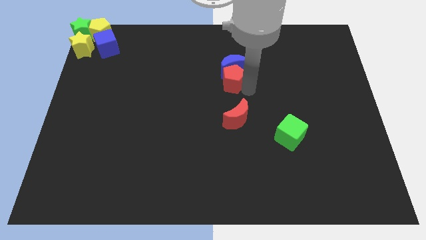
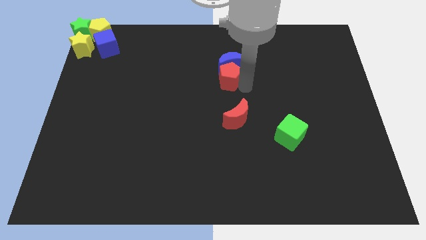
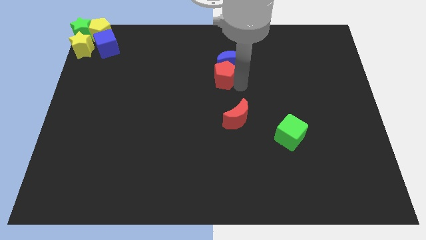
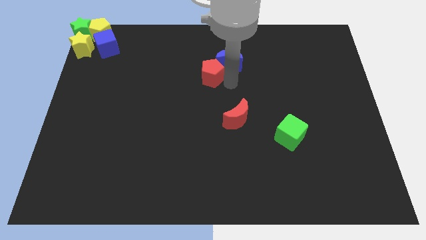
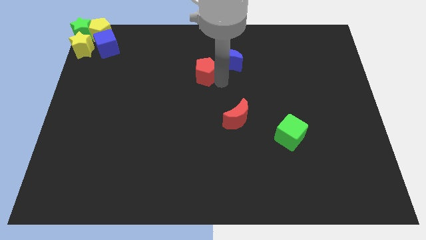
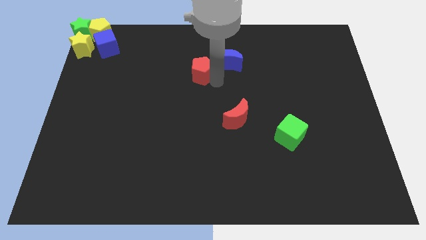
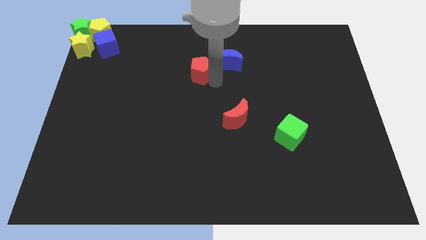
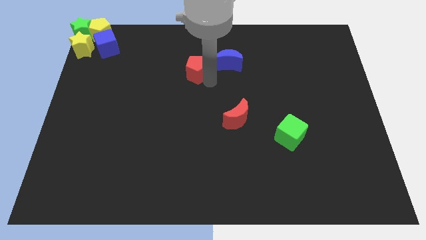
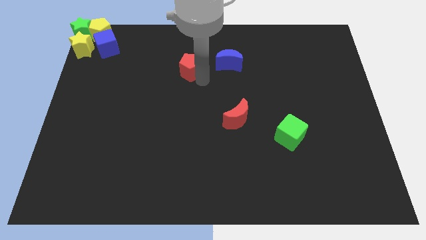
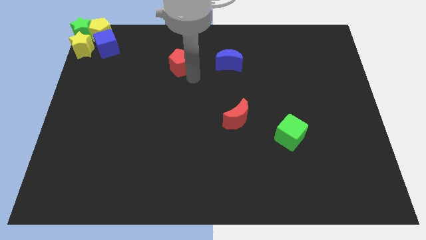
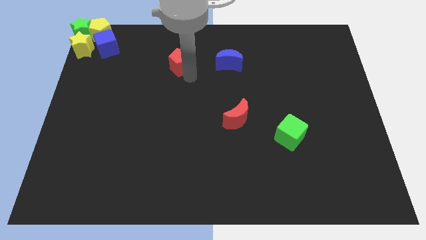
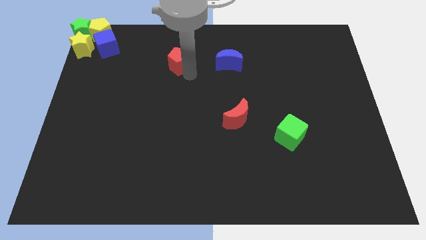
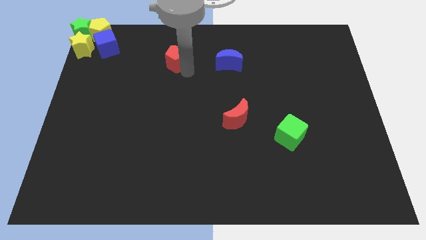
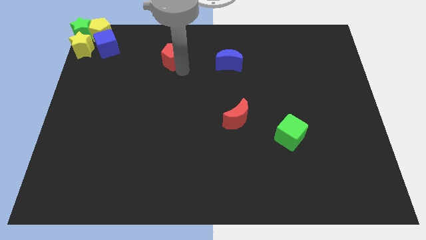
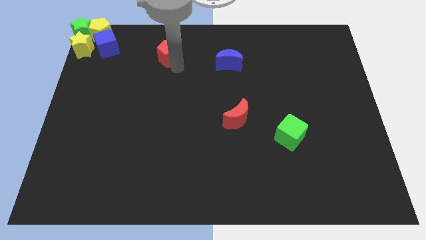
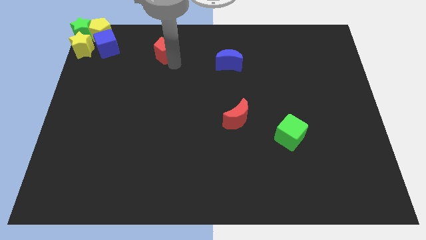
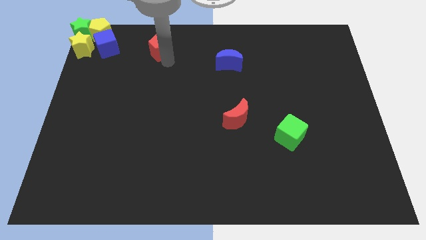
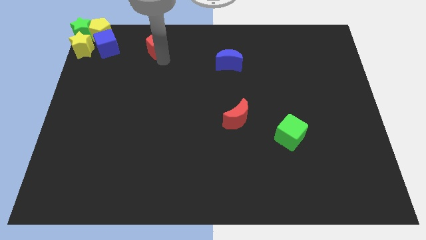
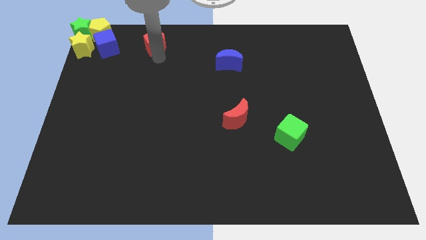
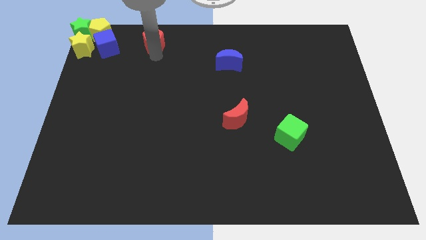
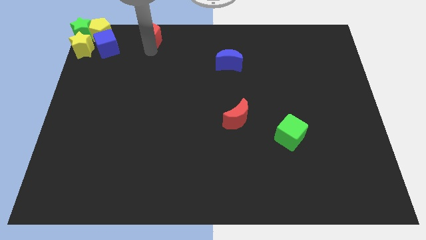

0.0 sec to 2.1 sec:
separate red pentagon from blue moon

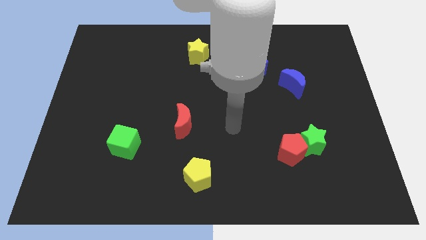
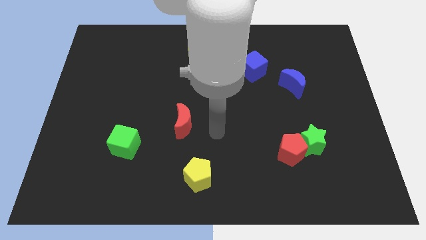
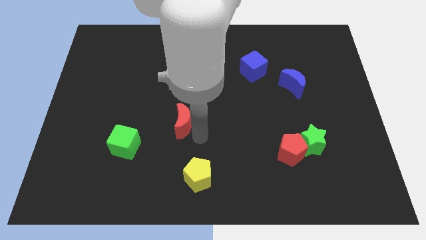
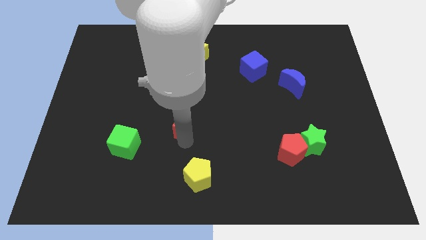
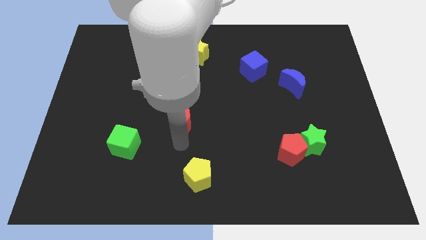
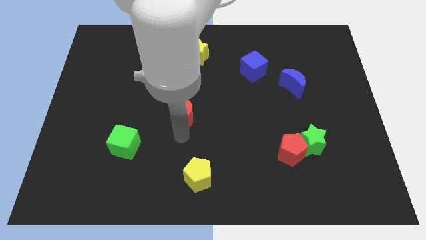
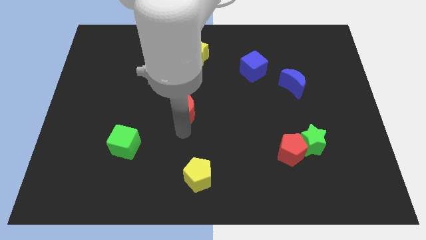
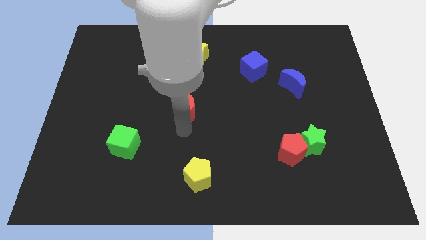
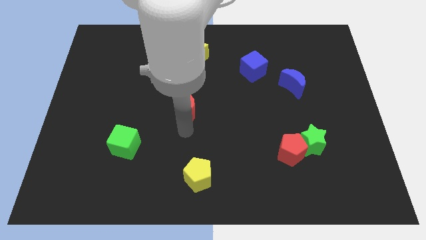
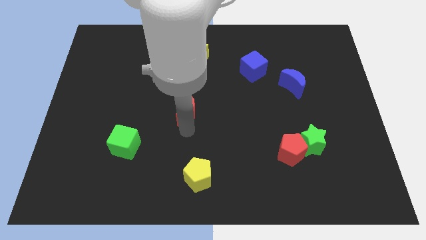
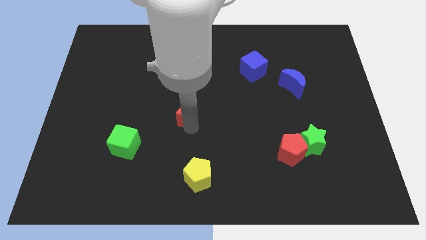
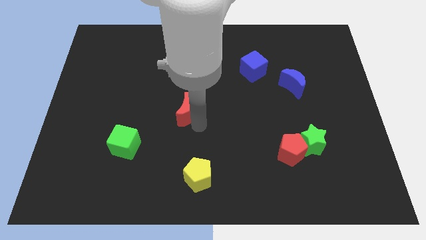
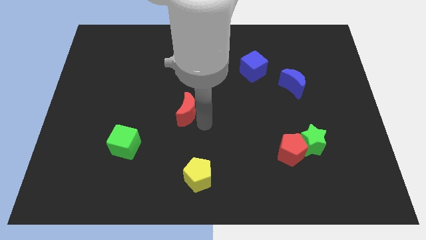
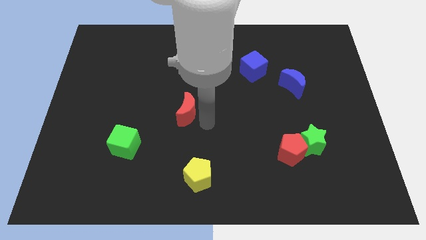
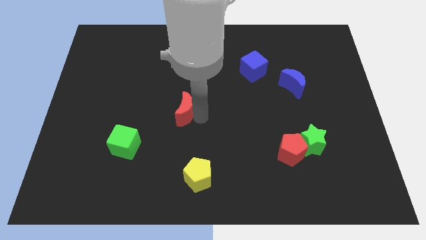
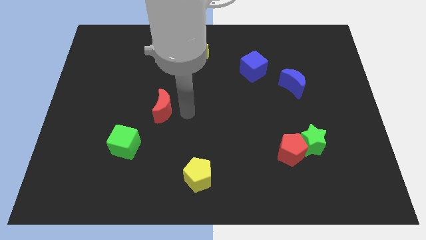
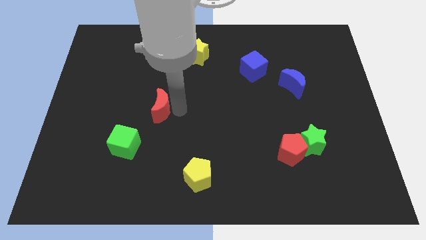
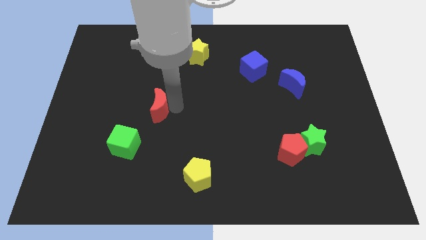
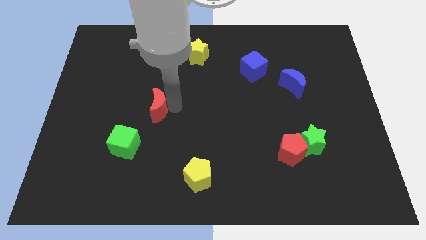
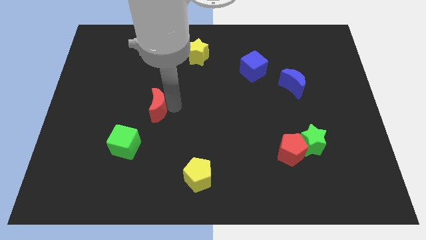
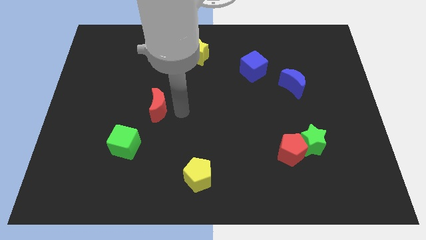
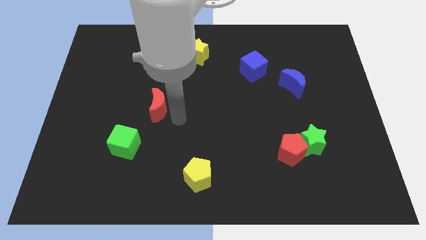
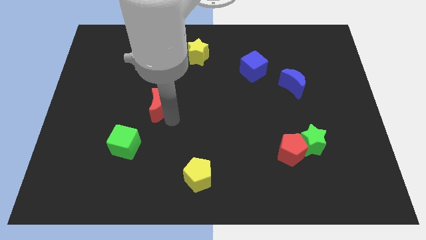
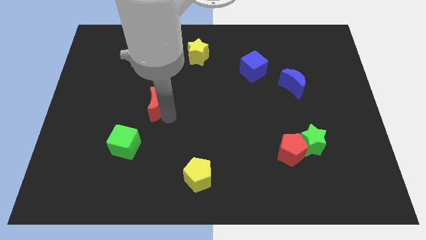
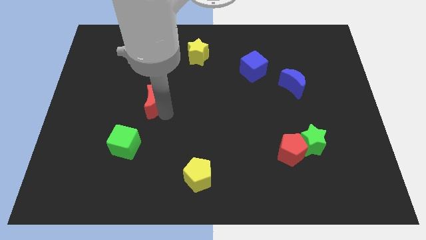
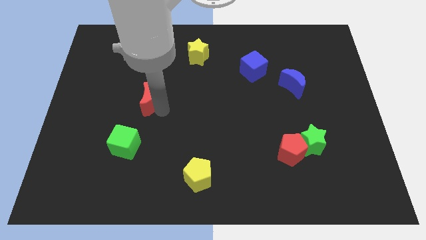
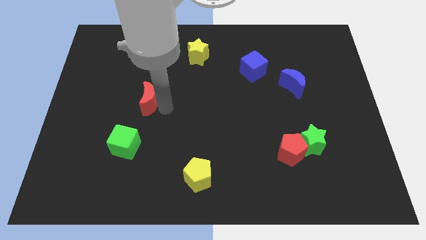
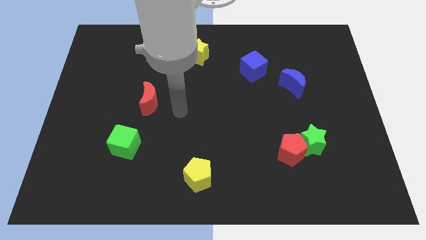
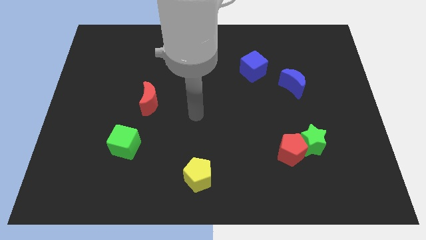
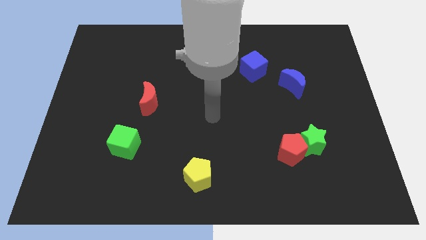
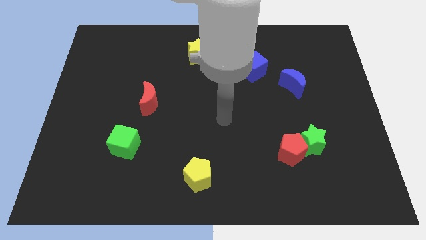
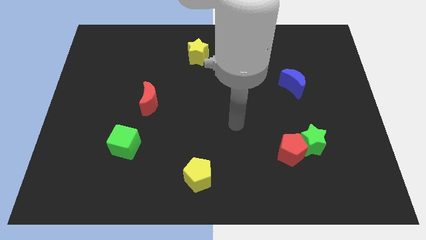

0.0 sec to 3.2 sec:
push the red moon vertically above the green cube

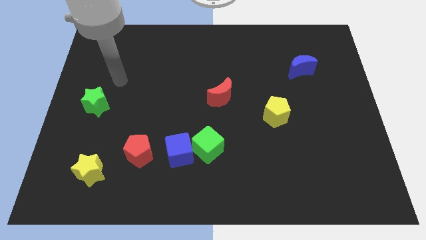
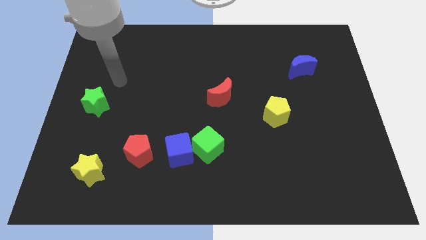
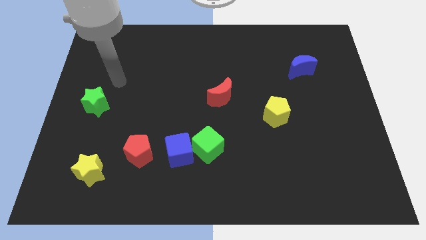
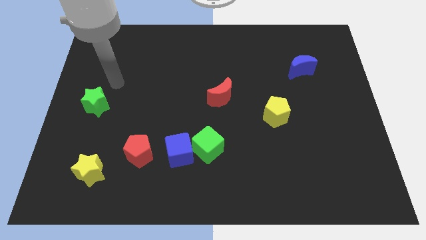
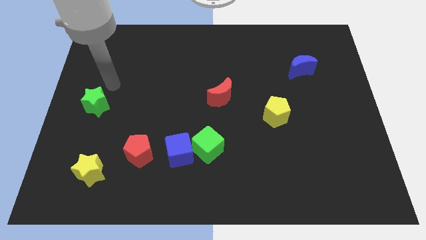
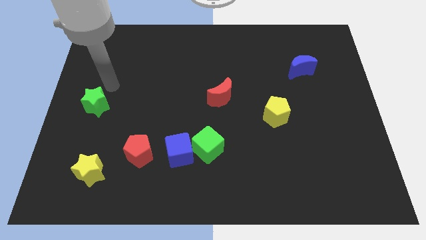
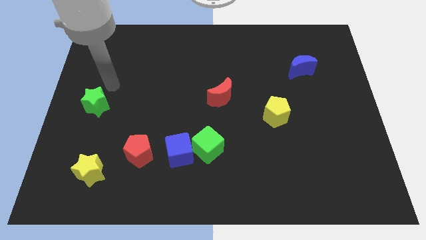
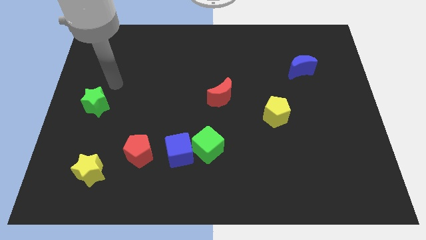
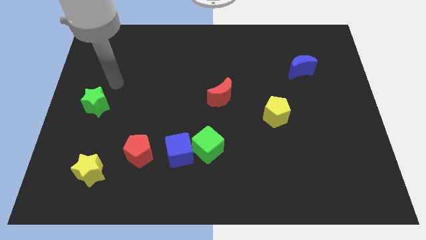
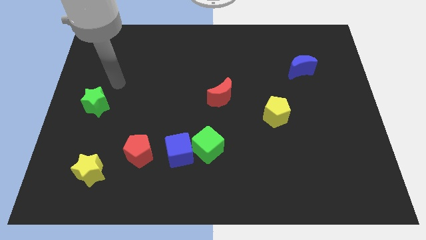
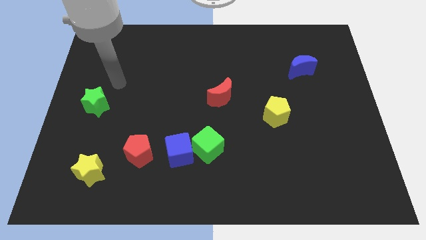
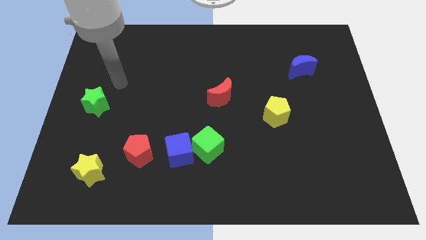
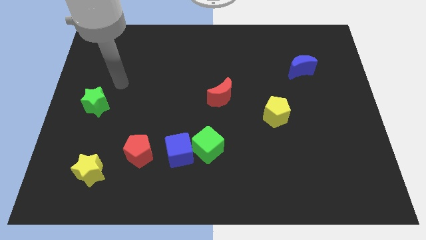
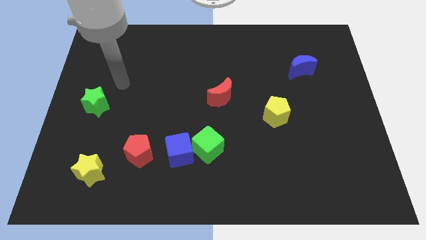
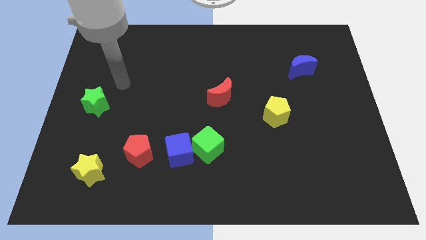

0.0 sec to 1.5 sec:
move the arm close to the green star

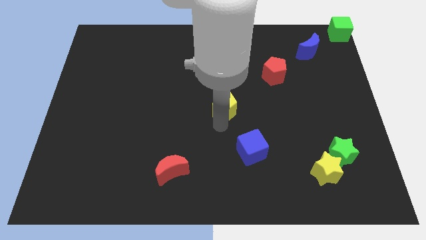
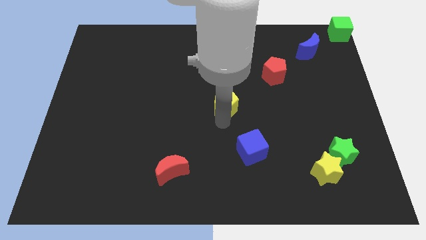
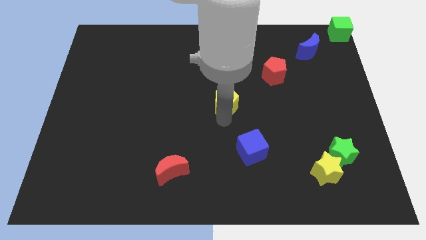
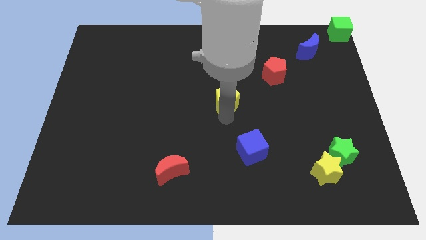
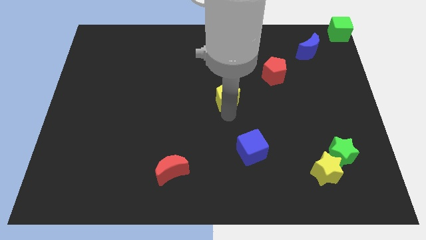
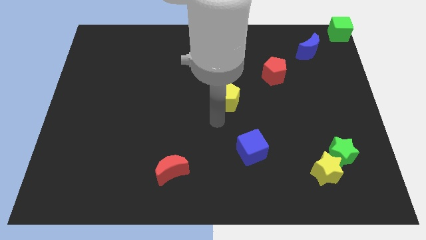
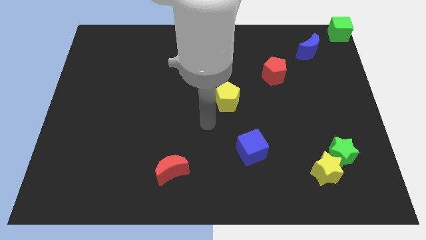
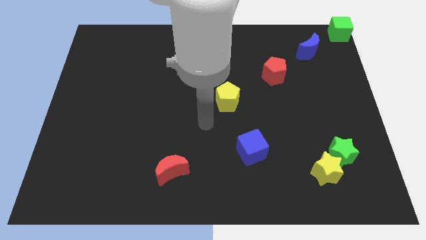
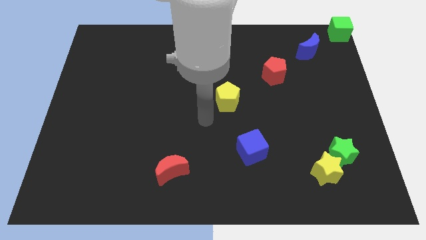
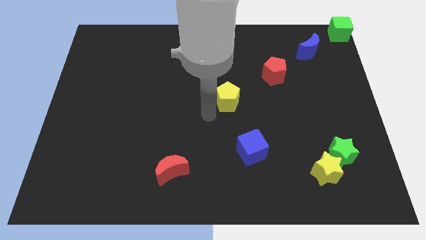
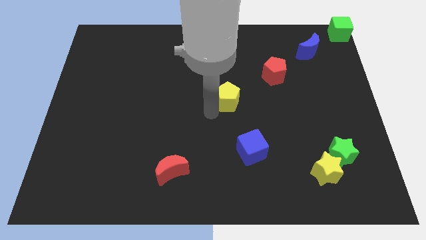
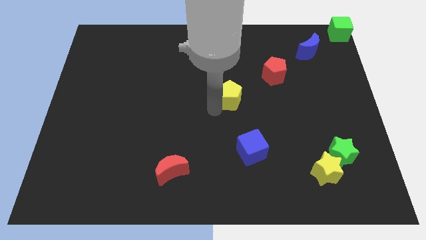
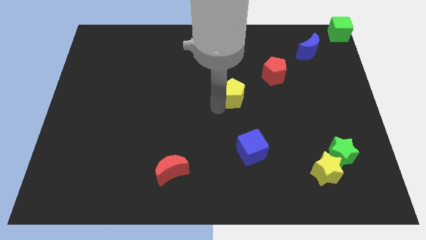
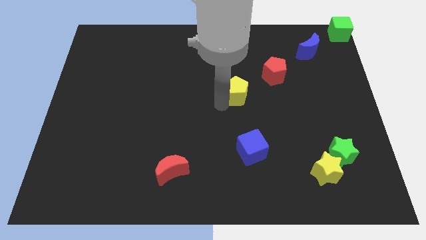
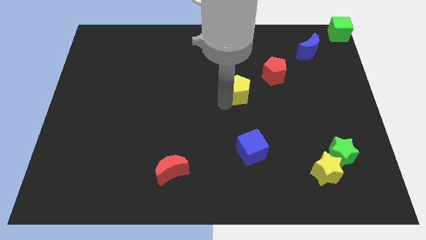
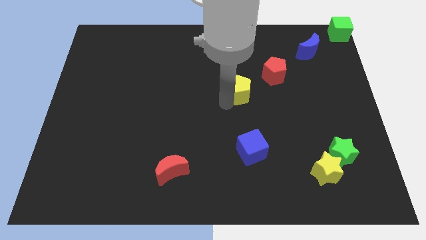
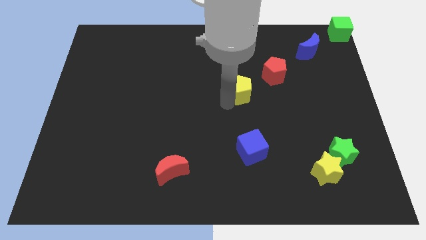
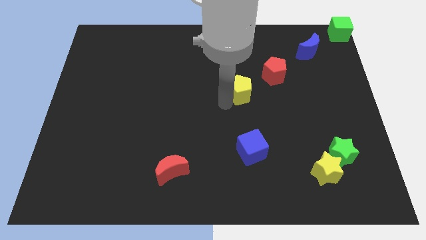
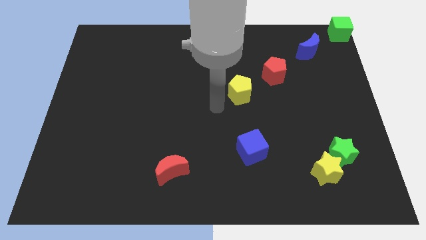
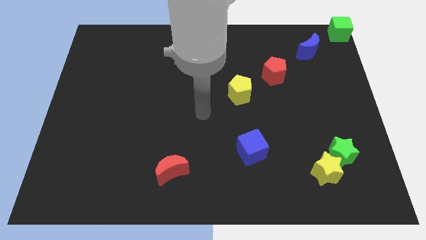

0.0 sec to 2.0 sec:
slide the yellow pentagon to the center

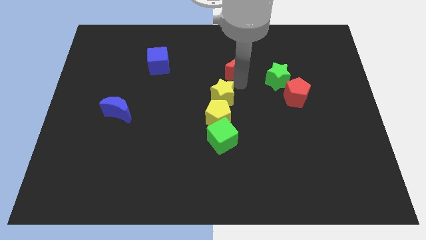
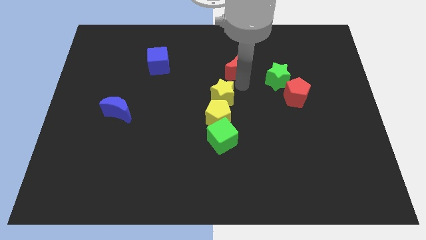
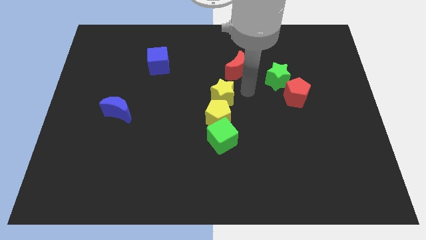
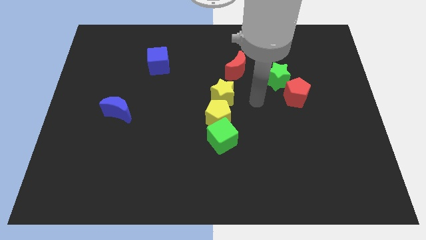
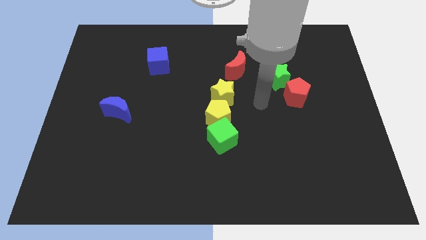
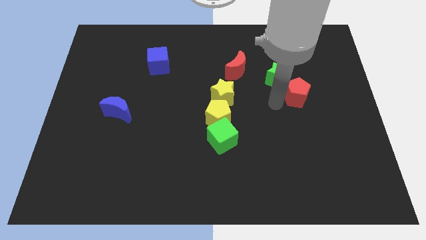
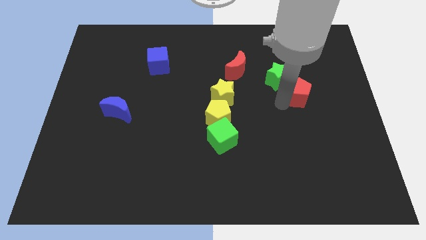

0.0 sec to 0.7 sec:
place the arm left to the red pentagon
